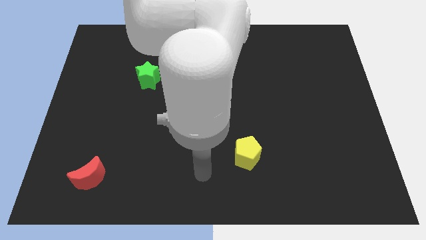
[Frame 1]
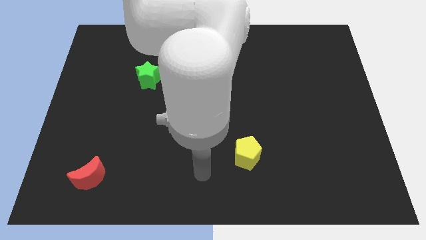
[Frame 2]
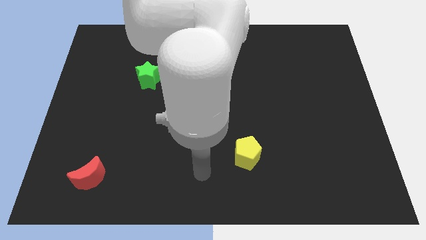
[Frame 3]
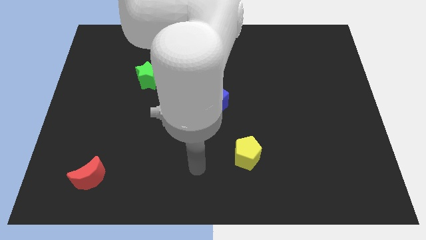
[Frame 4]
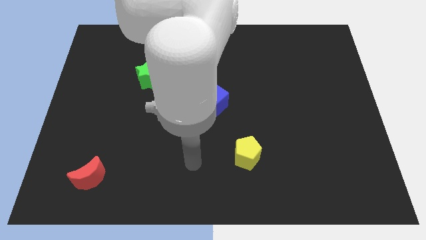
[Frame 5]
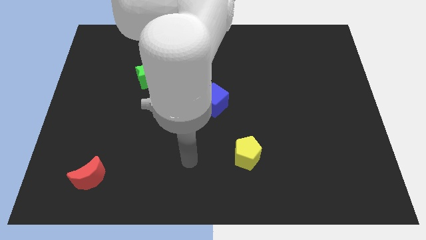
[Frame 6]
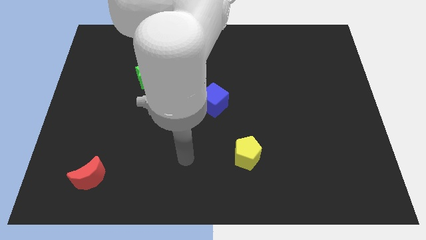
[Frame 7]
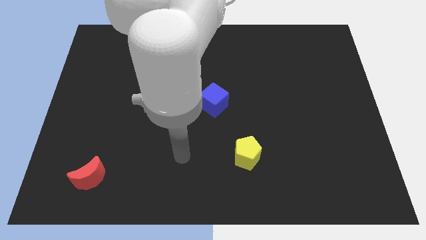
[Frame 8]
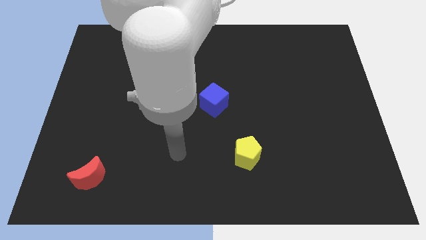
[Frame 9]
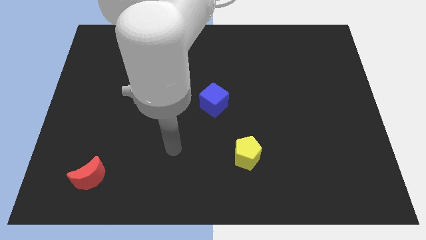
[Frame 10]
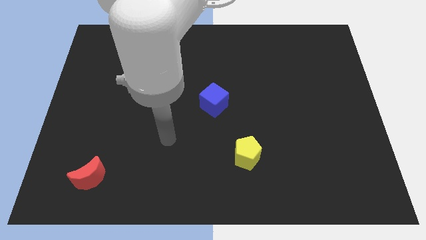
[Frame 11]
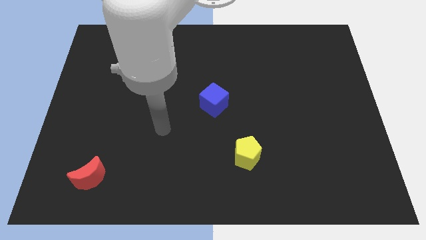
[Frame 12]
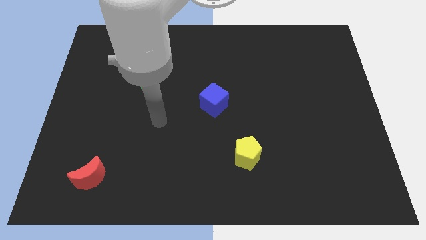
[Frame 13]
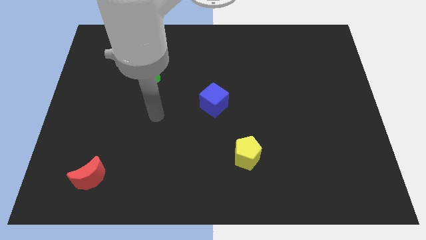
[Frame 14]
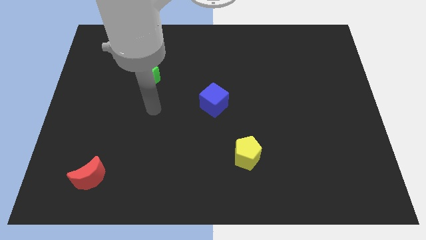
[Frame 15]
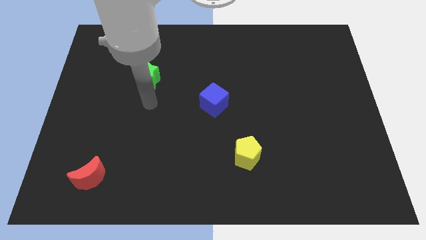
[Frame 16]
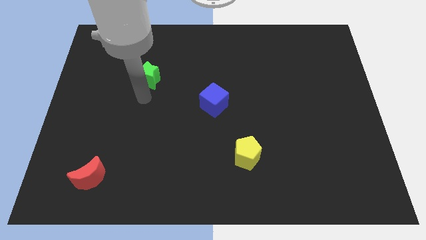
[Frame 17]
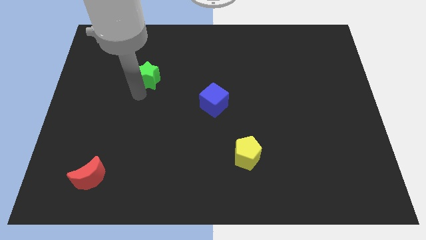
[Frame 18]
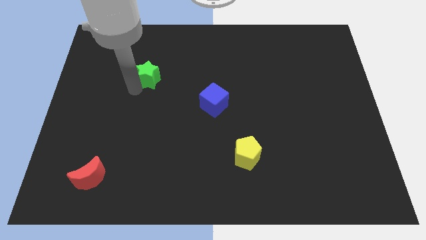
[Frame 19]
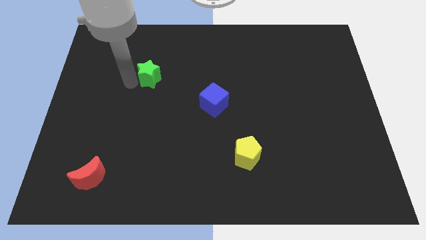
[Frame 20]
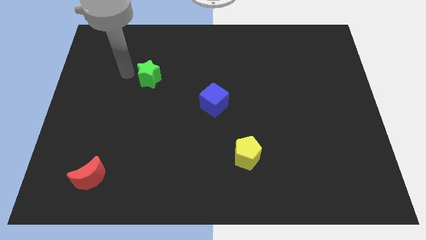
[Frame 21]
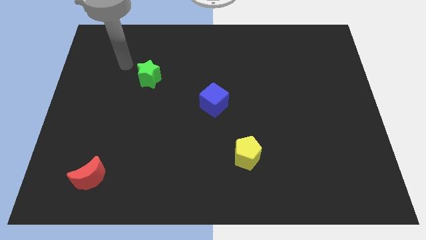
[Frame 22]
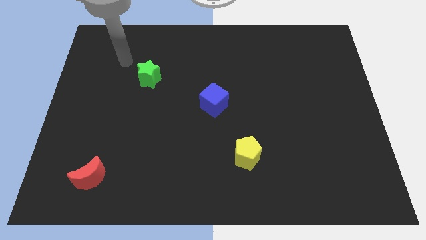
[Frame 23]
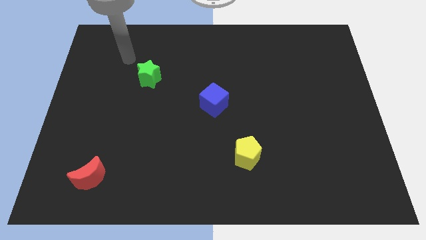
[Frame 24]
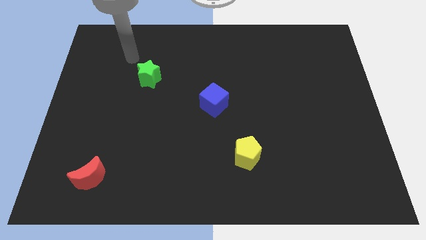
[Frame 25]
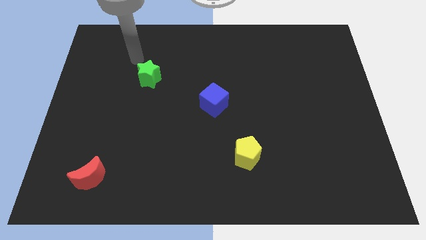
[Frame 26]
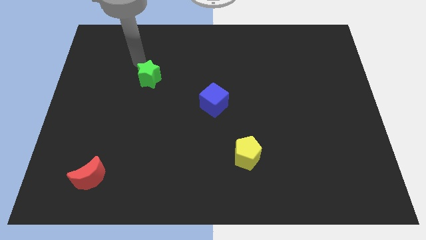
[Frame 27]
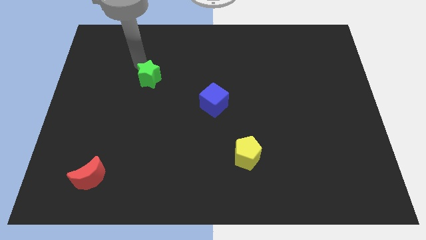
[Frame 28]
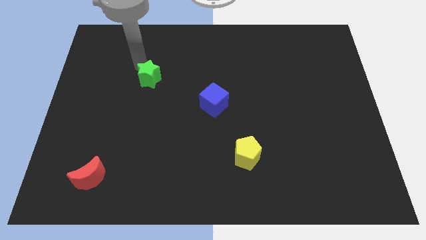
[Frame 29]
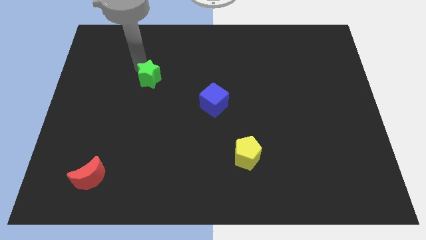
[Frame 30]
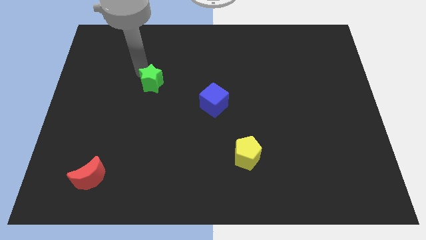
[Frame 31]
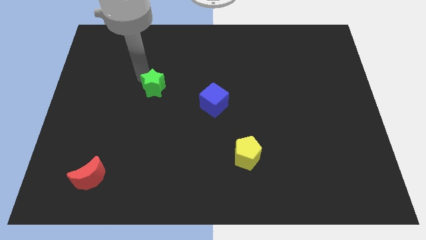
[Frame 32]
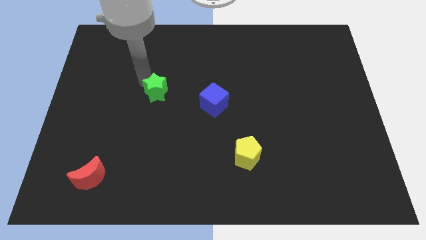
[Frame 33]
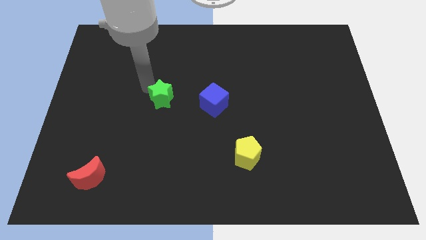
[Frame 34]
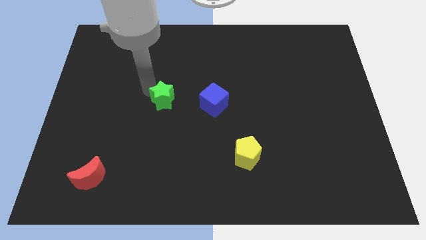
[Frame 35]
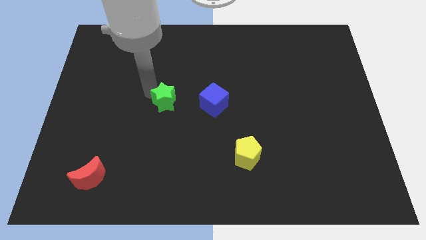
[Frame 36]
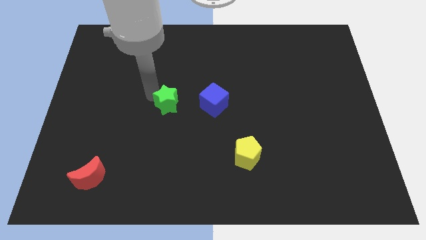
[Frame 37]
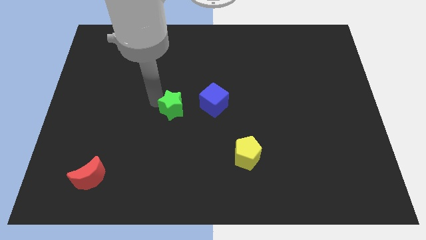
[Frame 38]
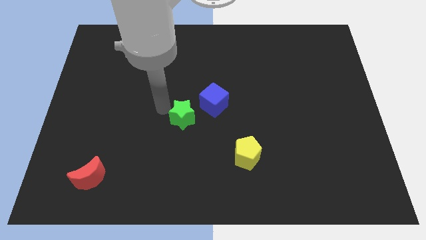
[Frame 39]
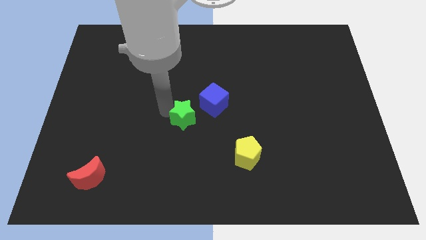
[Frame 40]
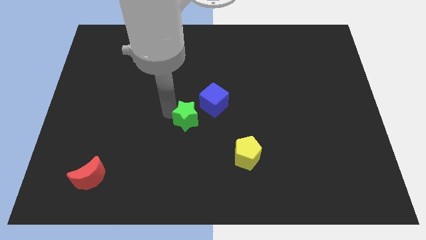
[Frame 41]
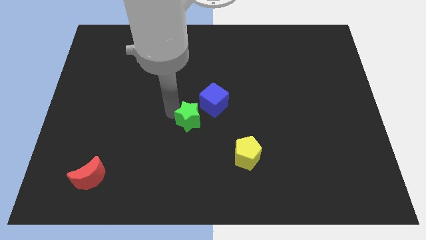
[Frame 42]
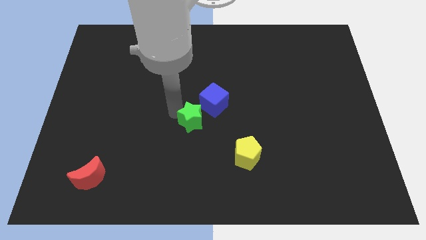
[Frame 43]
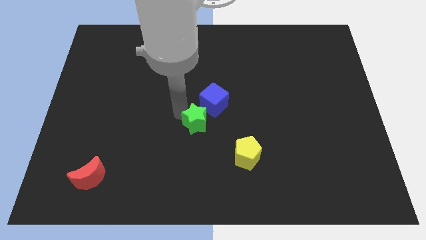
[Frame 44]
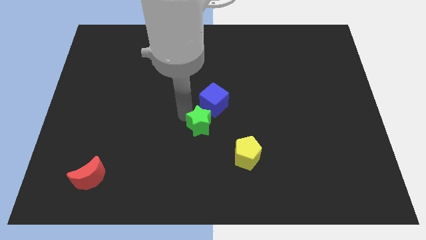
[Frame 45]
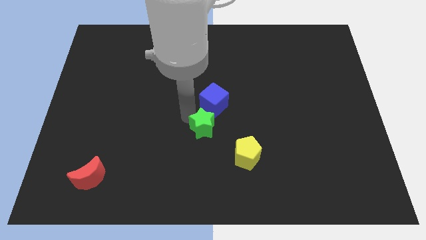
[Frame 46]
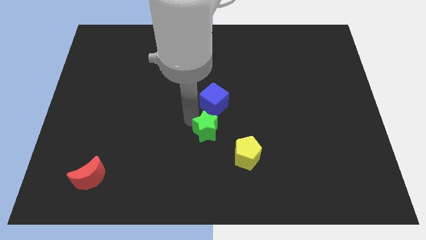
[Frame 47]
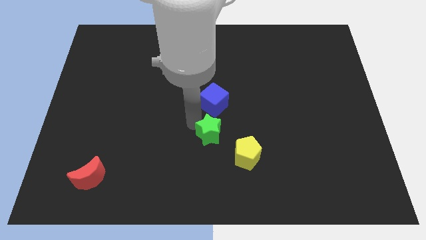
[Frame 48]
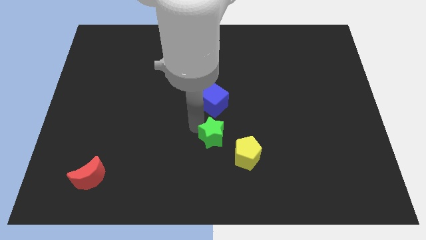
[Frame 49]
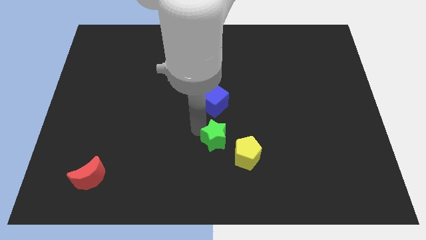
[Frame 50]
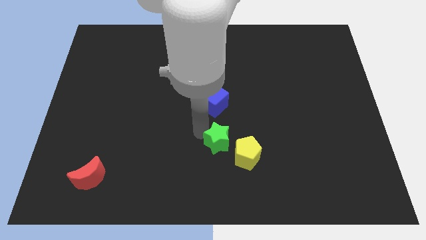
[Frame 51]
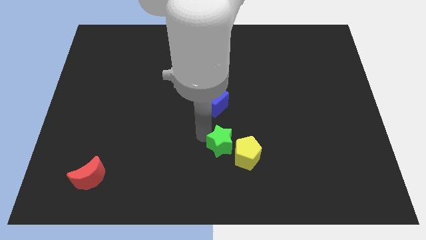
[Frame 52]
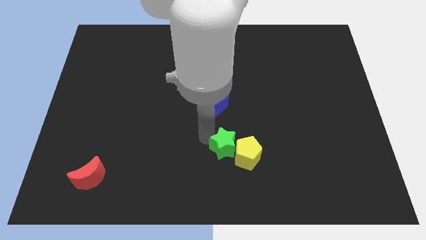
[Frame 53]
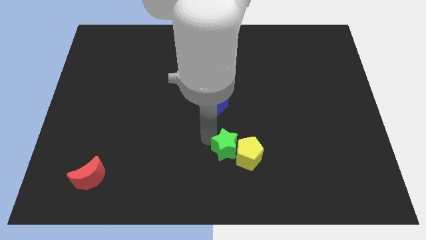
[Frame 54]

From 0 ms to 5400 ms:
slide the green block towards the pentagon

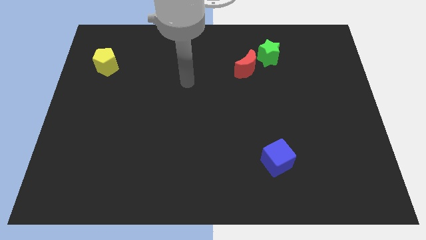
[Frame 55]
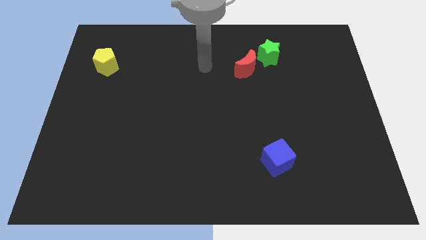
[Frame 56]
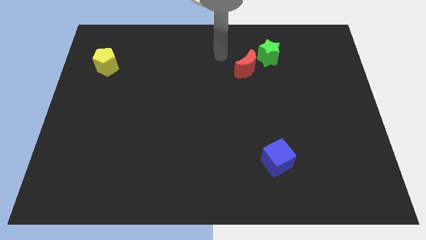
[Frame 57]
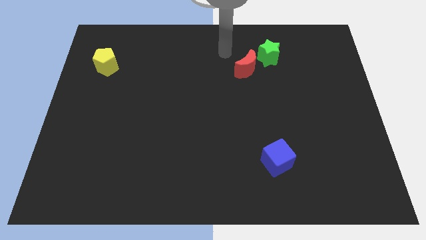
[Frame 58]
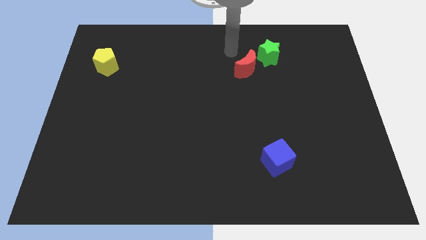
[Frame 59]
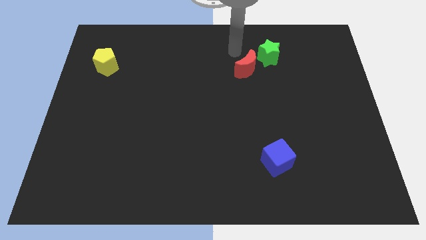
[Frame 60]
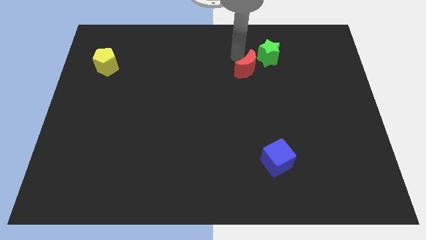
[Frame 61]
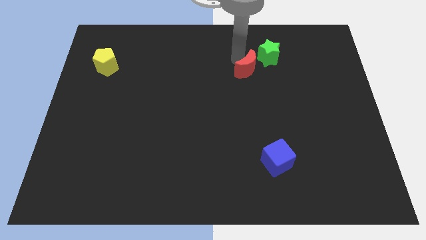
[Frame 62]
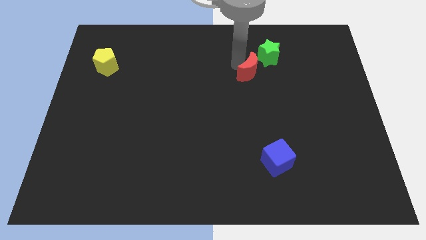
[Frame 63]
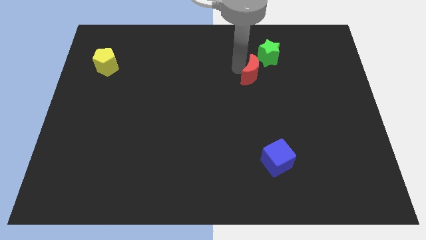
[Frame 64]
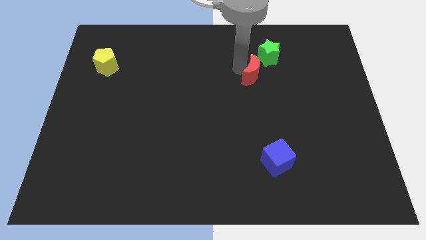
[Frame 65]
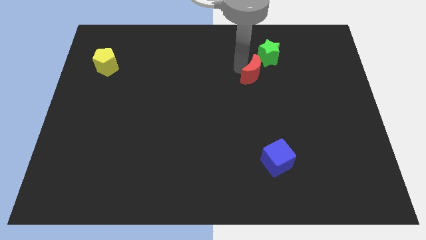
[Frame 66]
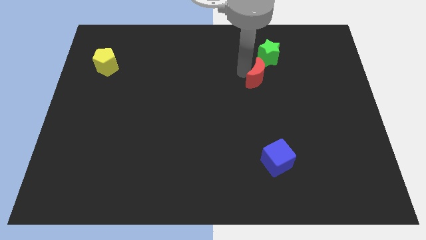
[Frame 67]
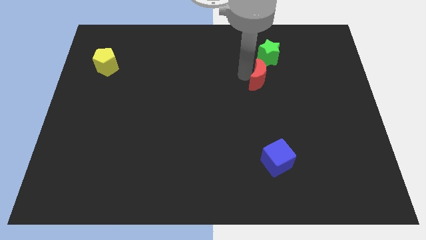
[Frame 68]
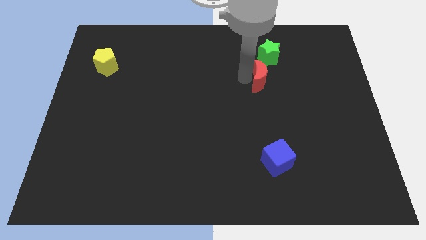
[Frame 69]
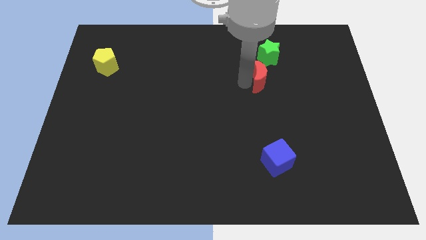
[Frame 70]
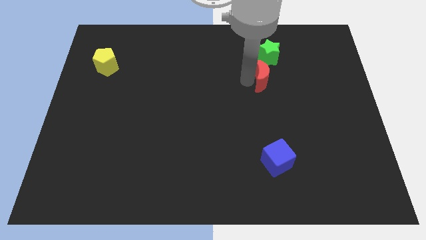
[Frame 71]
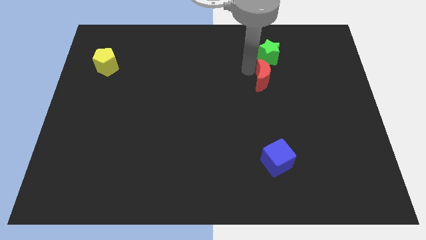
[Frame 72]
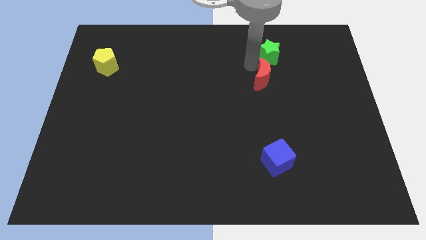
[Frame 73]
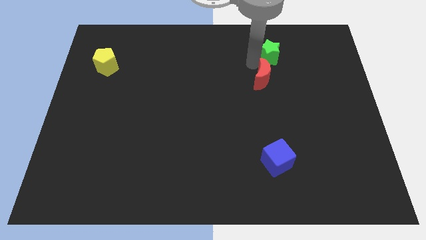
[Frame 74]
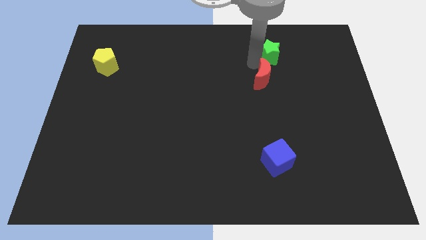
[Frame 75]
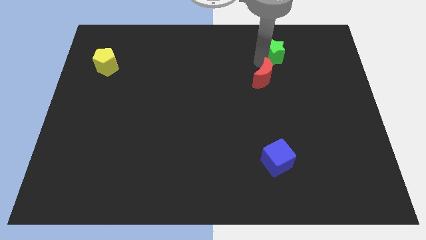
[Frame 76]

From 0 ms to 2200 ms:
move the moon next to the blue cube

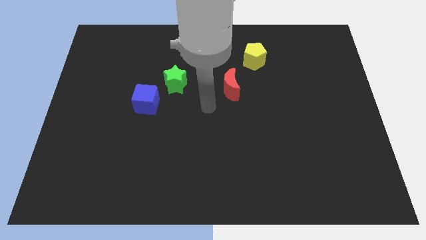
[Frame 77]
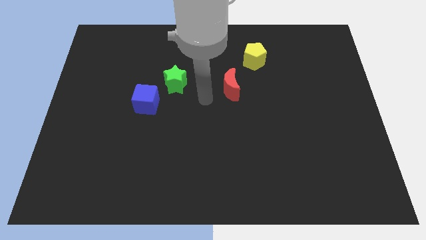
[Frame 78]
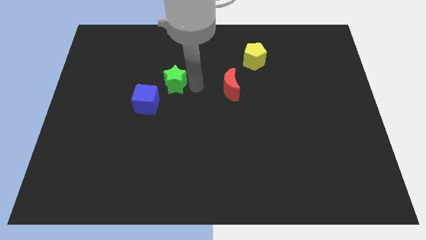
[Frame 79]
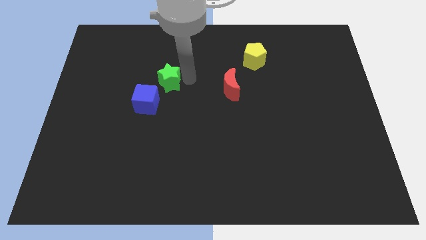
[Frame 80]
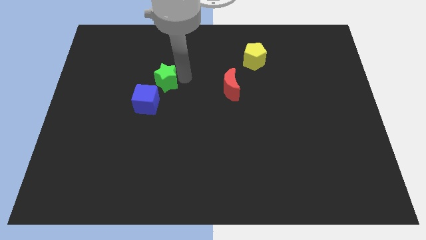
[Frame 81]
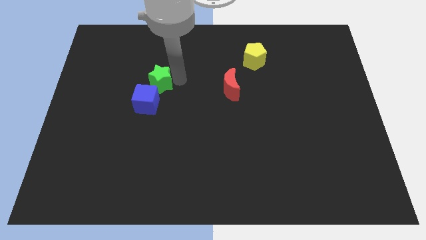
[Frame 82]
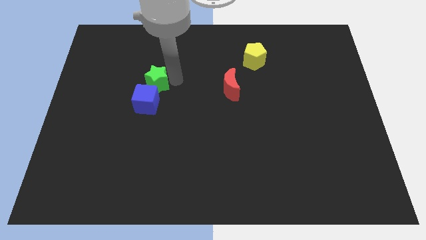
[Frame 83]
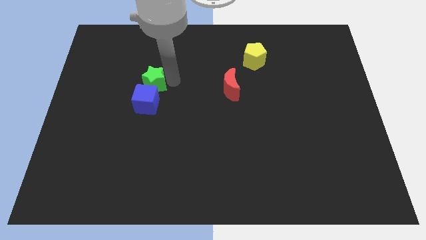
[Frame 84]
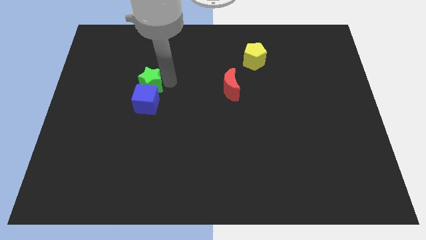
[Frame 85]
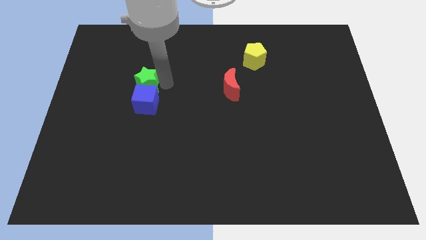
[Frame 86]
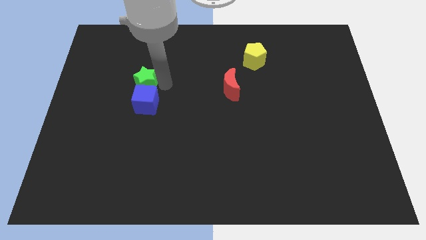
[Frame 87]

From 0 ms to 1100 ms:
push the green star next to the cube

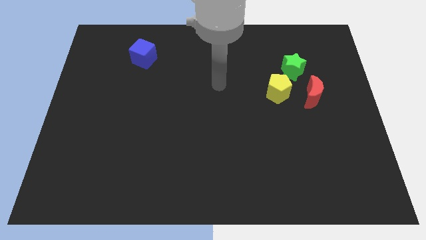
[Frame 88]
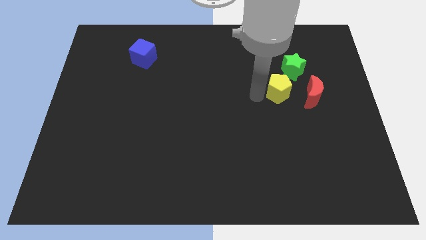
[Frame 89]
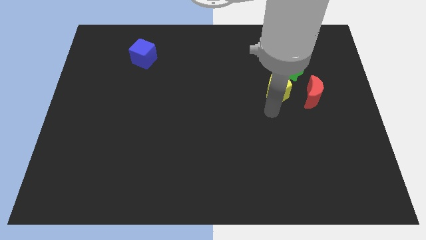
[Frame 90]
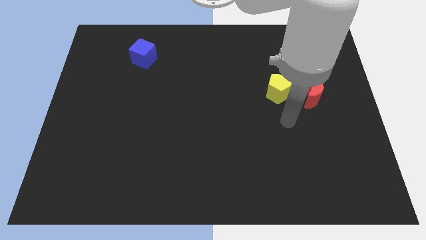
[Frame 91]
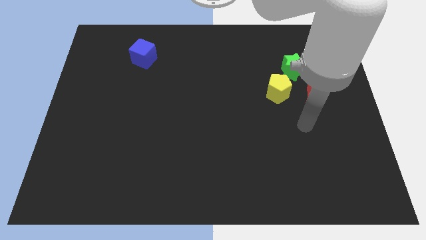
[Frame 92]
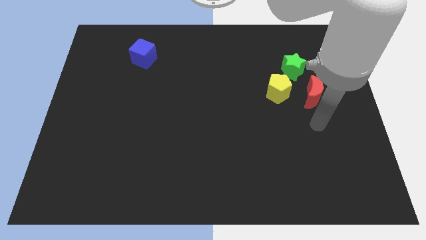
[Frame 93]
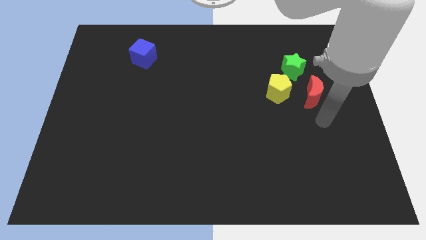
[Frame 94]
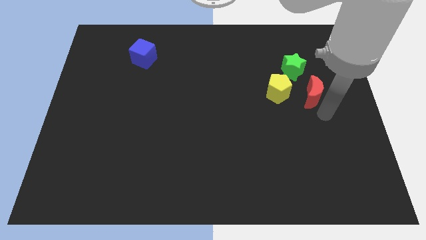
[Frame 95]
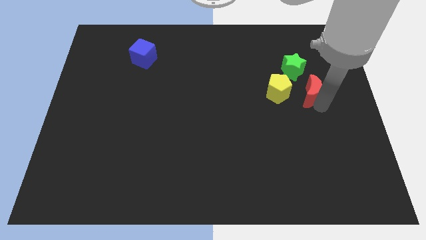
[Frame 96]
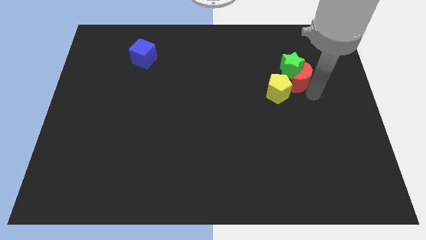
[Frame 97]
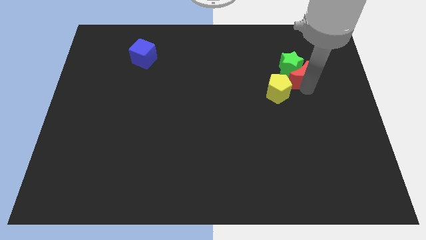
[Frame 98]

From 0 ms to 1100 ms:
slide the moon towards the star
